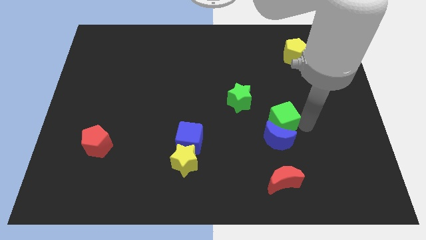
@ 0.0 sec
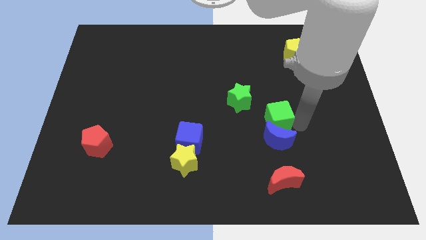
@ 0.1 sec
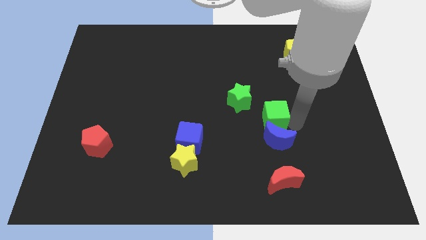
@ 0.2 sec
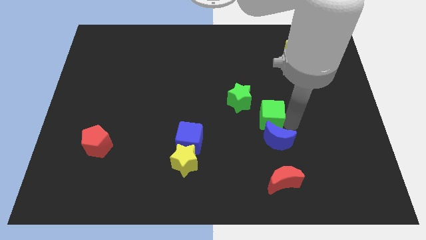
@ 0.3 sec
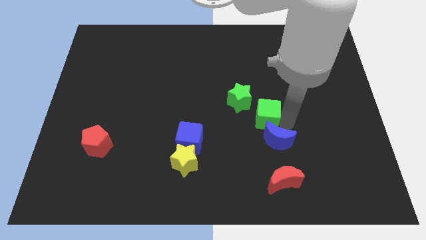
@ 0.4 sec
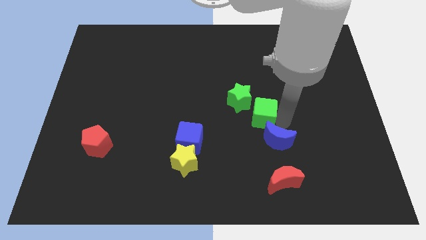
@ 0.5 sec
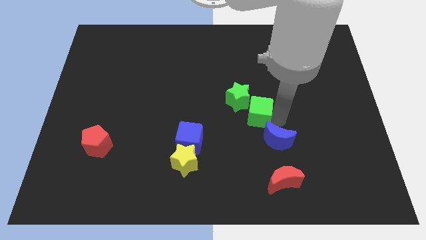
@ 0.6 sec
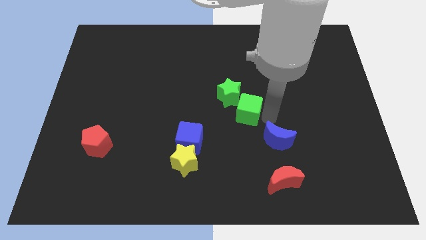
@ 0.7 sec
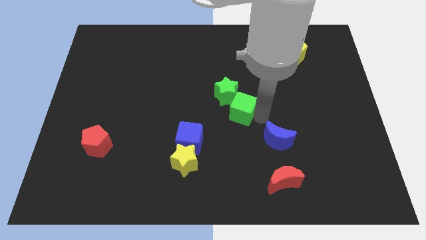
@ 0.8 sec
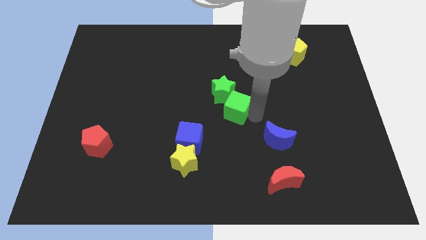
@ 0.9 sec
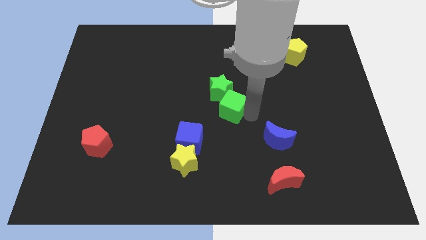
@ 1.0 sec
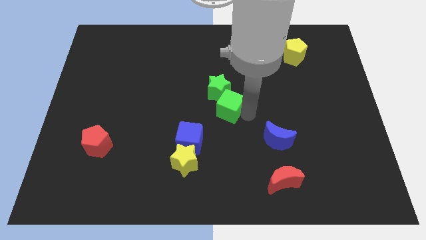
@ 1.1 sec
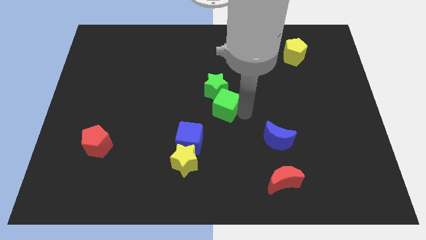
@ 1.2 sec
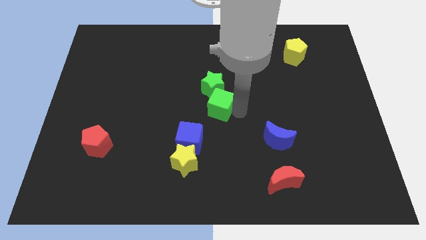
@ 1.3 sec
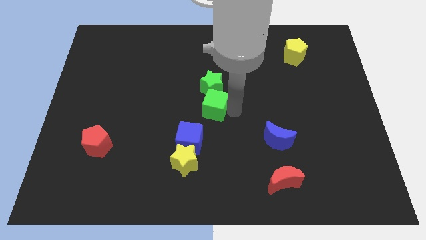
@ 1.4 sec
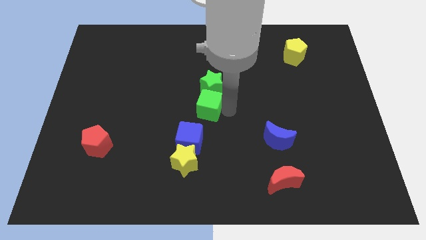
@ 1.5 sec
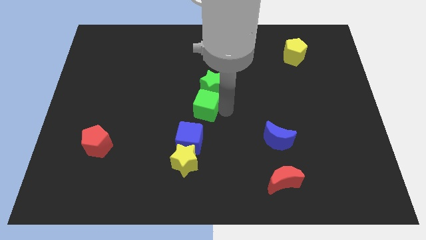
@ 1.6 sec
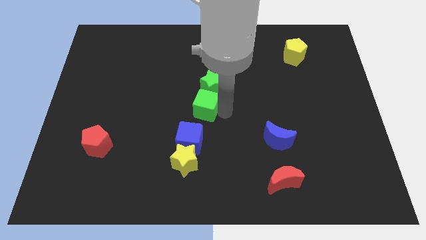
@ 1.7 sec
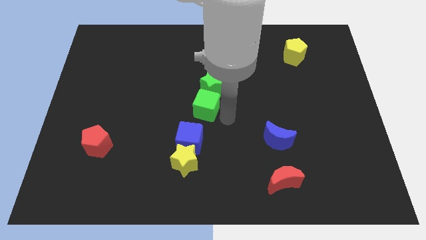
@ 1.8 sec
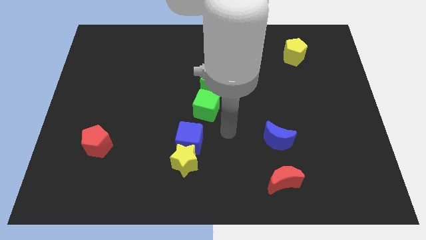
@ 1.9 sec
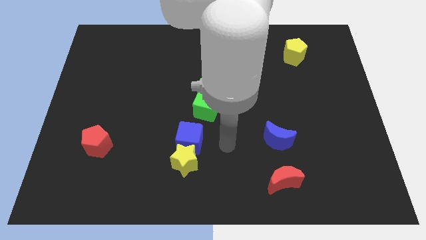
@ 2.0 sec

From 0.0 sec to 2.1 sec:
push both the green cube and green star to the center of the board

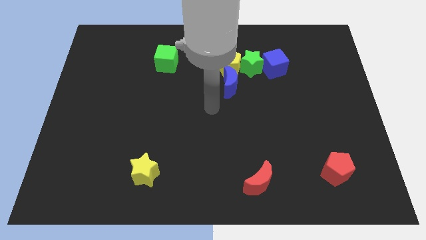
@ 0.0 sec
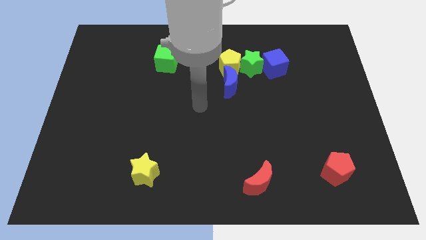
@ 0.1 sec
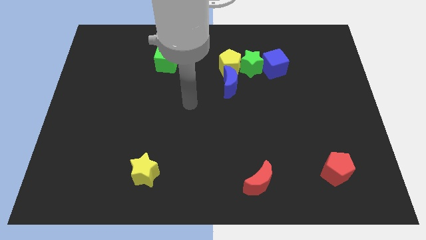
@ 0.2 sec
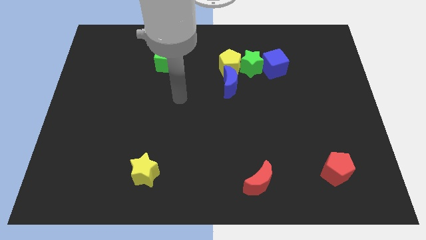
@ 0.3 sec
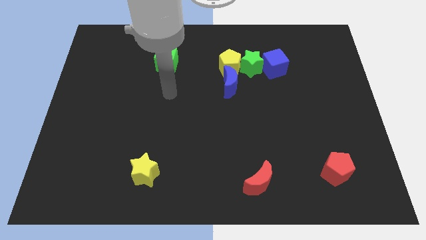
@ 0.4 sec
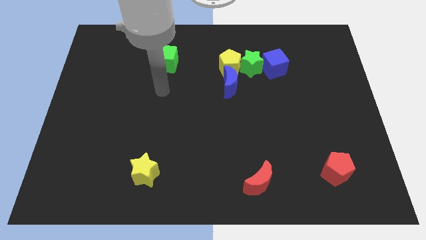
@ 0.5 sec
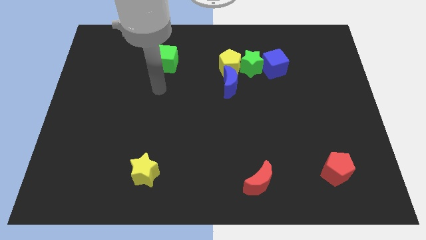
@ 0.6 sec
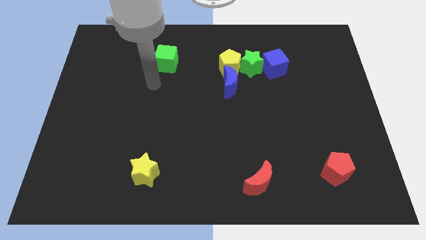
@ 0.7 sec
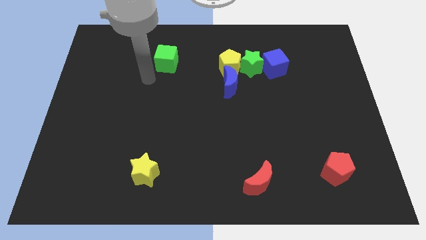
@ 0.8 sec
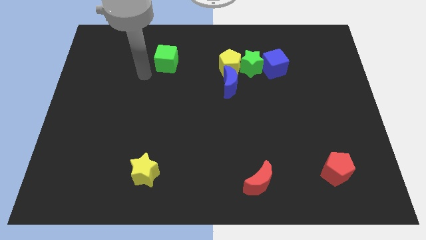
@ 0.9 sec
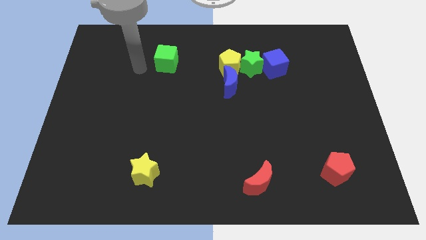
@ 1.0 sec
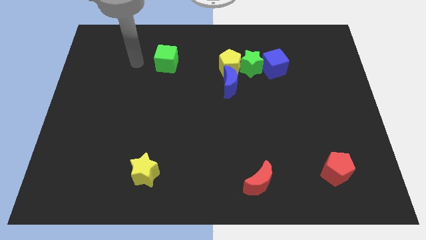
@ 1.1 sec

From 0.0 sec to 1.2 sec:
move the arm to the left of the green cube

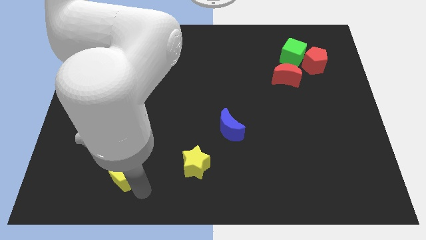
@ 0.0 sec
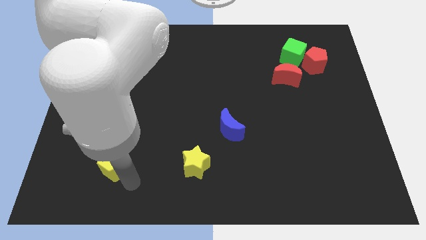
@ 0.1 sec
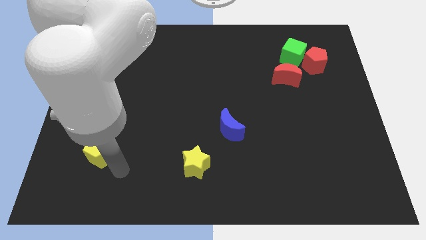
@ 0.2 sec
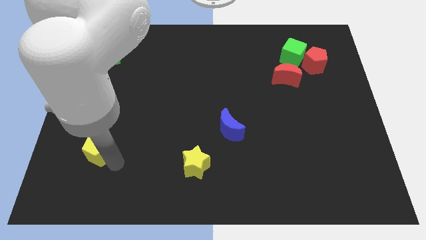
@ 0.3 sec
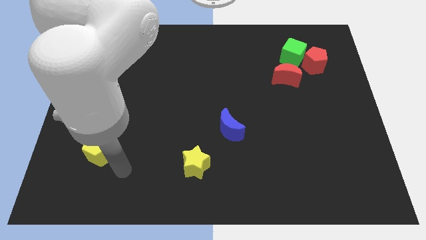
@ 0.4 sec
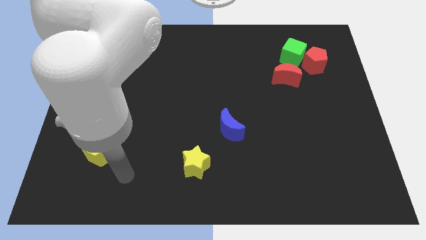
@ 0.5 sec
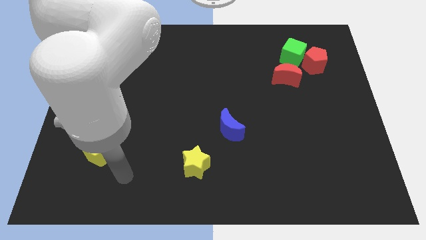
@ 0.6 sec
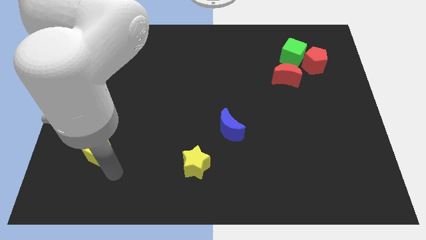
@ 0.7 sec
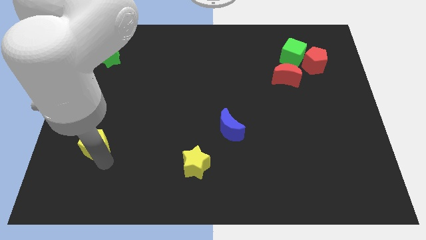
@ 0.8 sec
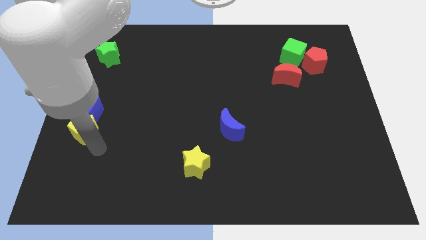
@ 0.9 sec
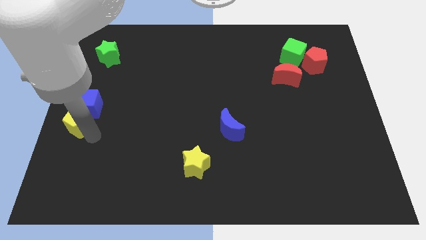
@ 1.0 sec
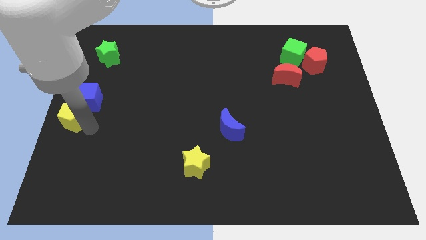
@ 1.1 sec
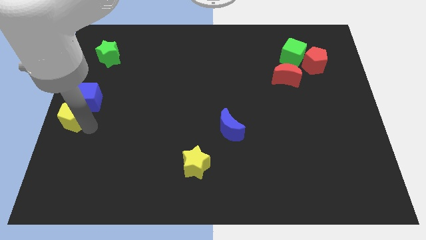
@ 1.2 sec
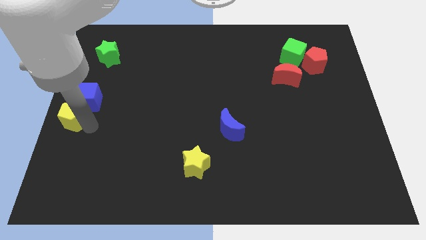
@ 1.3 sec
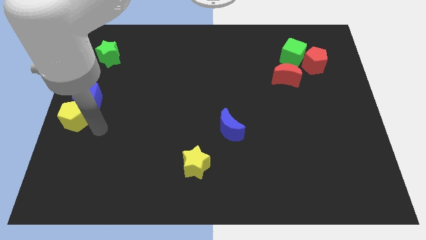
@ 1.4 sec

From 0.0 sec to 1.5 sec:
push the yellow pentagon into the blue cube towards the left center

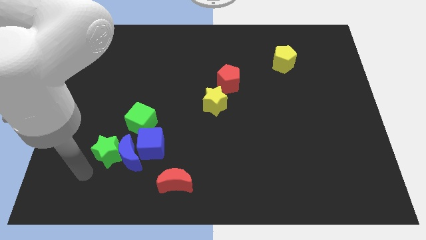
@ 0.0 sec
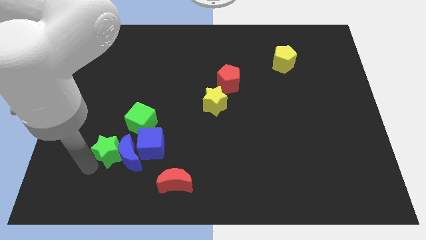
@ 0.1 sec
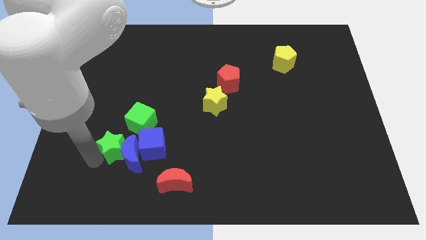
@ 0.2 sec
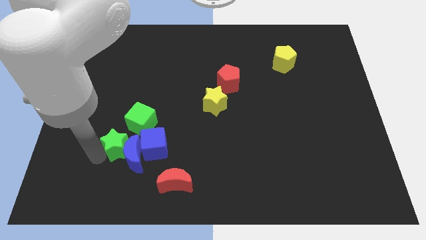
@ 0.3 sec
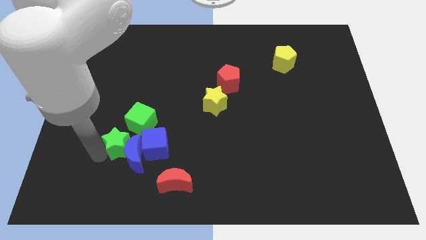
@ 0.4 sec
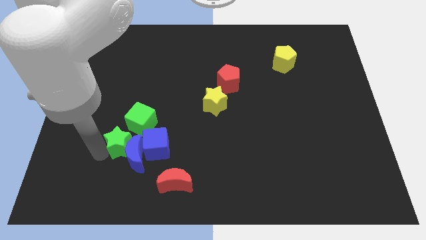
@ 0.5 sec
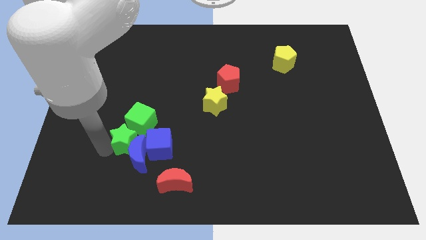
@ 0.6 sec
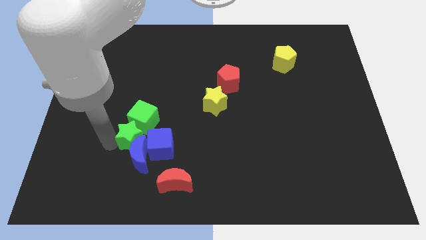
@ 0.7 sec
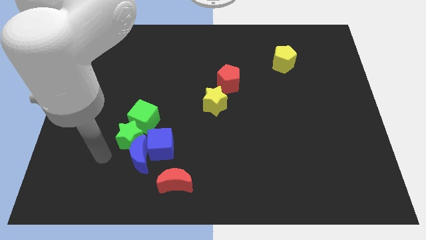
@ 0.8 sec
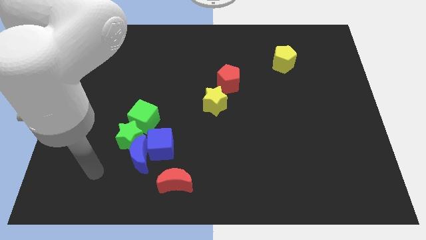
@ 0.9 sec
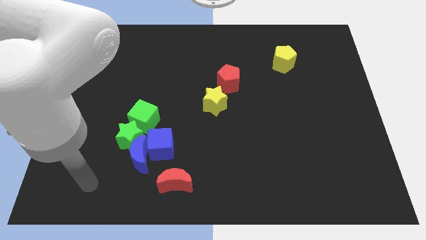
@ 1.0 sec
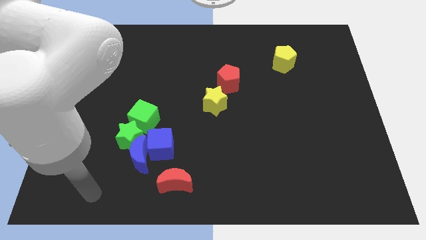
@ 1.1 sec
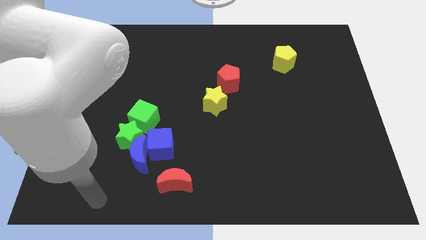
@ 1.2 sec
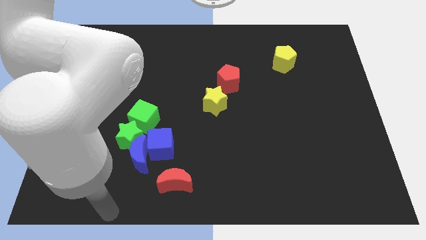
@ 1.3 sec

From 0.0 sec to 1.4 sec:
push the green star into the green cube

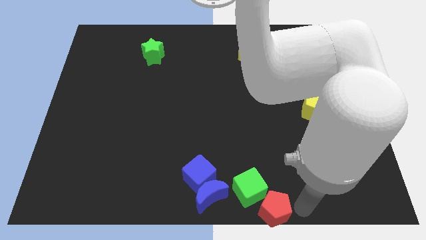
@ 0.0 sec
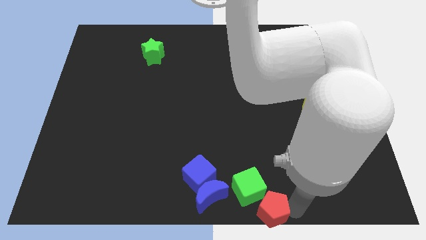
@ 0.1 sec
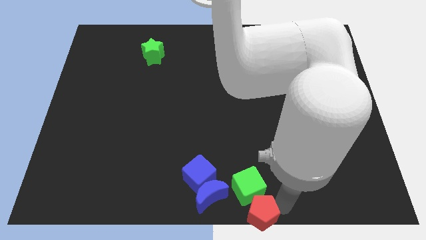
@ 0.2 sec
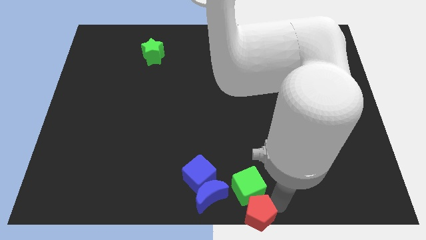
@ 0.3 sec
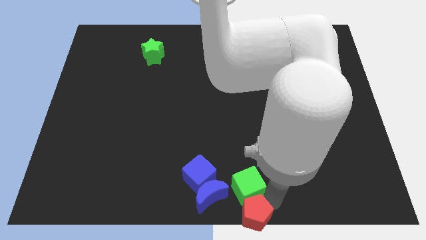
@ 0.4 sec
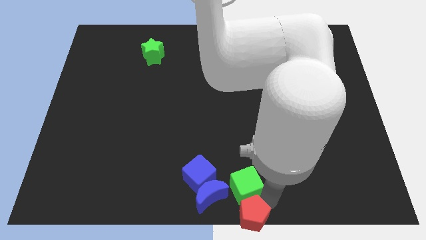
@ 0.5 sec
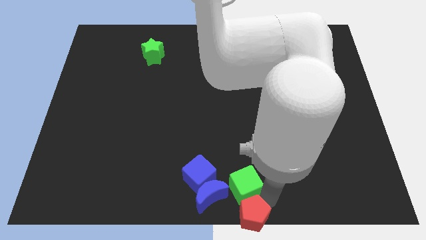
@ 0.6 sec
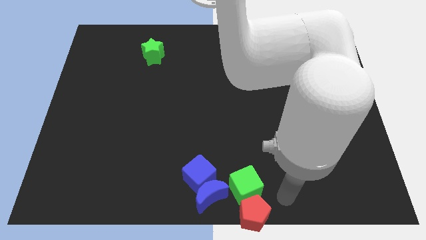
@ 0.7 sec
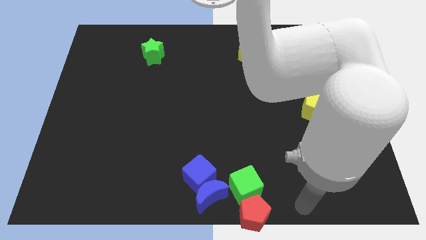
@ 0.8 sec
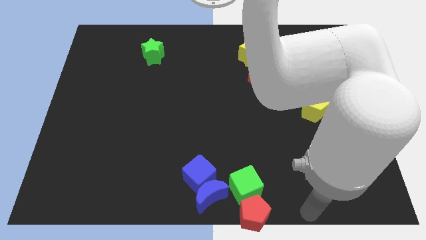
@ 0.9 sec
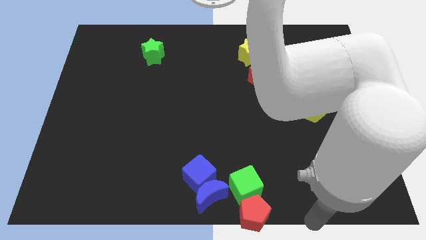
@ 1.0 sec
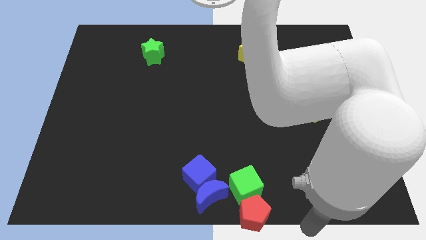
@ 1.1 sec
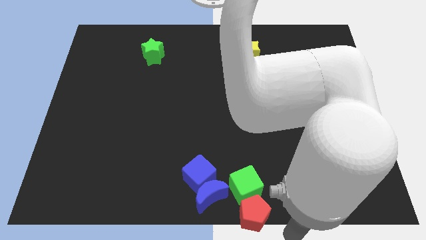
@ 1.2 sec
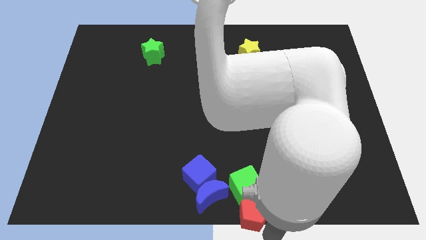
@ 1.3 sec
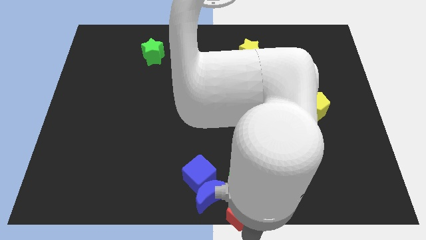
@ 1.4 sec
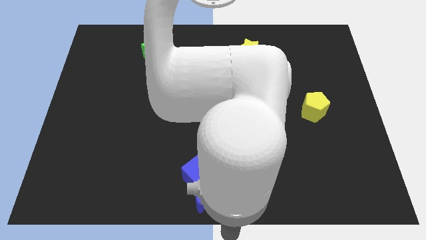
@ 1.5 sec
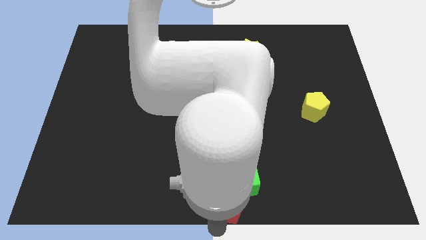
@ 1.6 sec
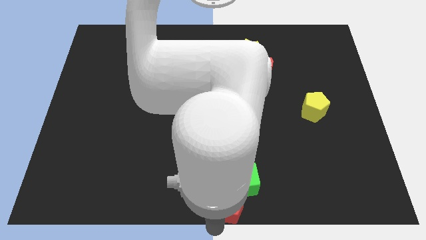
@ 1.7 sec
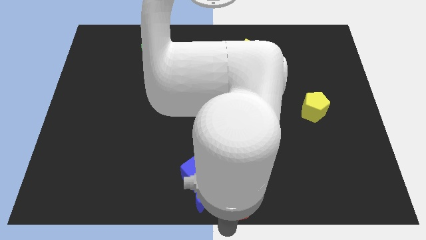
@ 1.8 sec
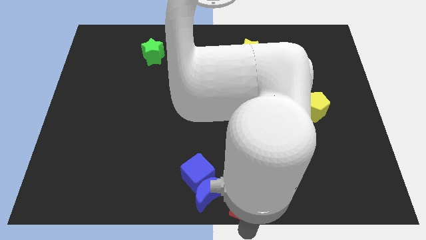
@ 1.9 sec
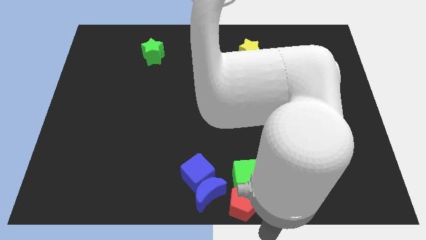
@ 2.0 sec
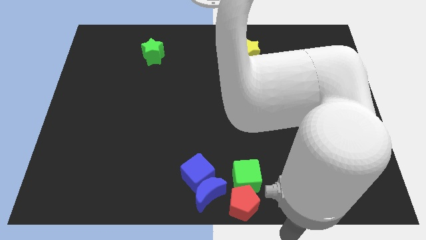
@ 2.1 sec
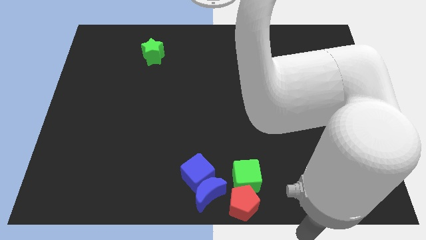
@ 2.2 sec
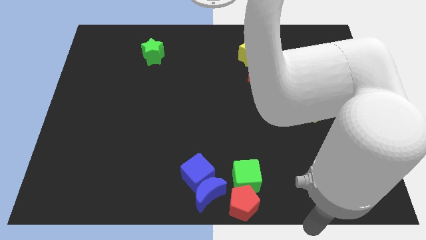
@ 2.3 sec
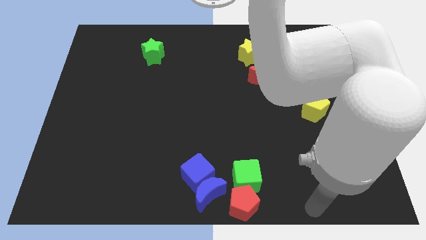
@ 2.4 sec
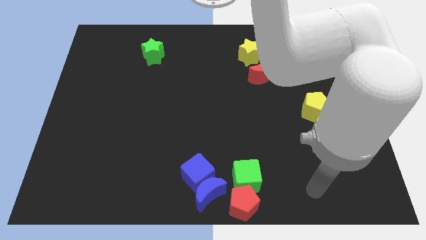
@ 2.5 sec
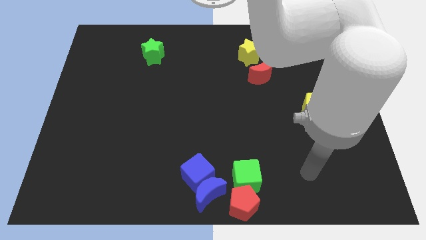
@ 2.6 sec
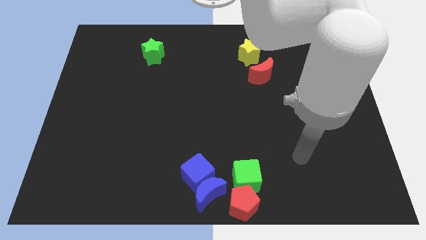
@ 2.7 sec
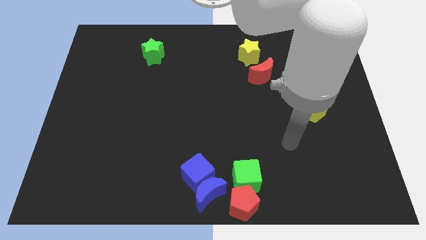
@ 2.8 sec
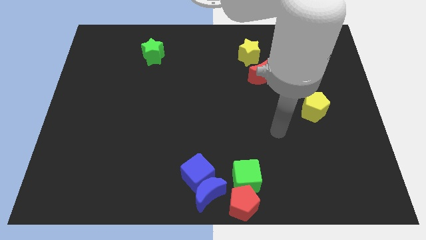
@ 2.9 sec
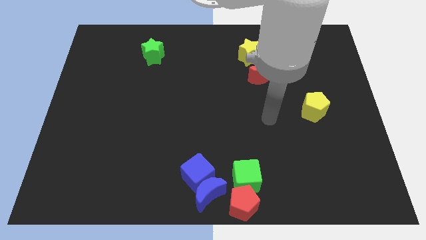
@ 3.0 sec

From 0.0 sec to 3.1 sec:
push the red pentagon into the bottom of the green cube
